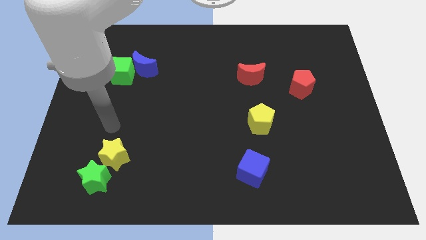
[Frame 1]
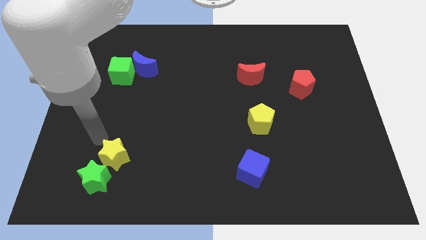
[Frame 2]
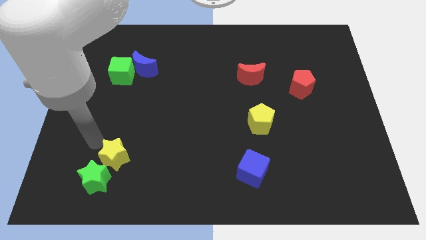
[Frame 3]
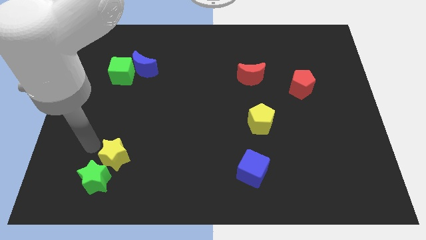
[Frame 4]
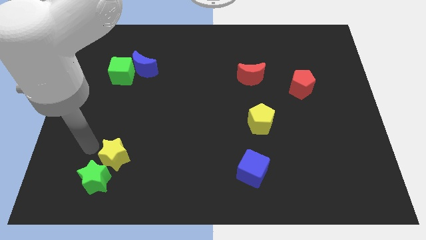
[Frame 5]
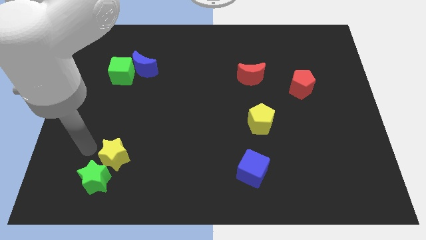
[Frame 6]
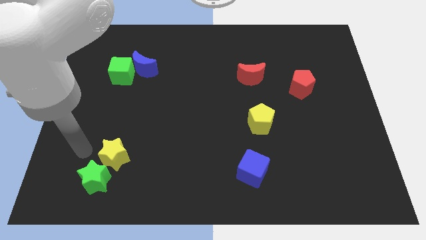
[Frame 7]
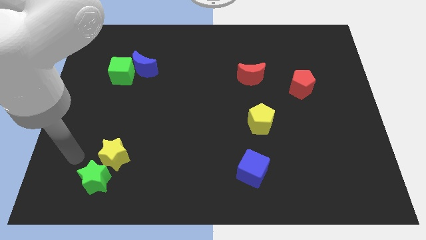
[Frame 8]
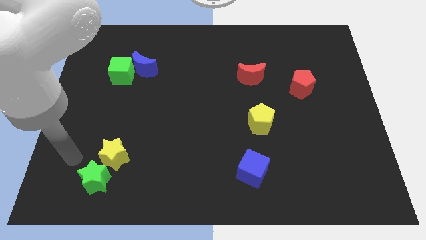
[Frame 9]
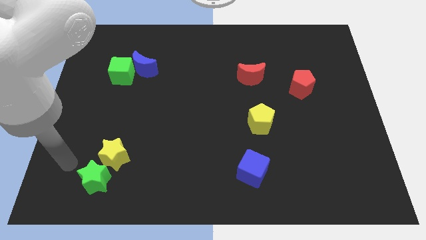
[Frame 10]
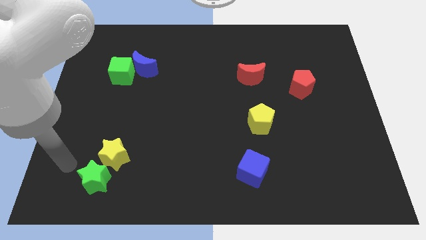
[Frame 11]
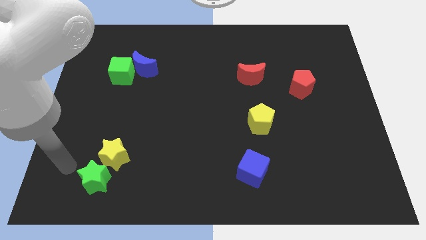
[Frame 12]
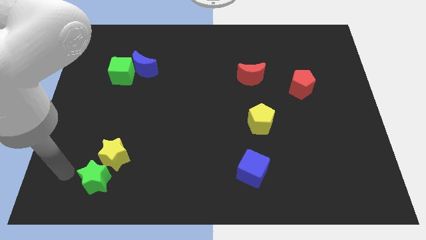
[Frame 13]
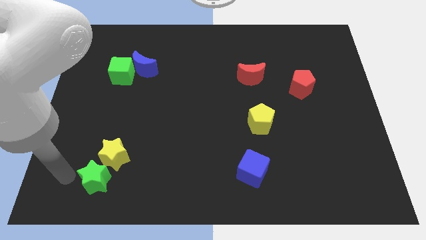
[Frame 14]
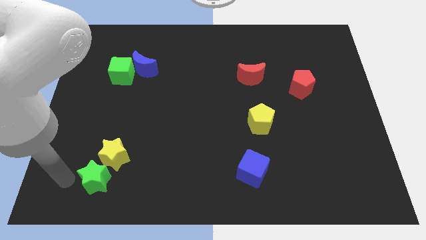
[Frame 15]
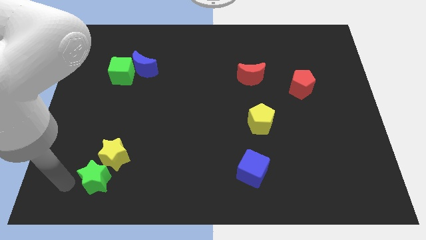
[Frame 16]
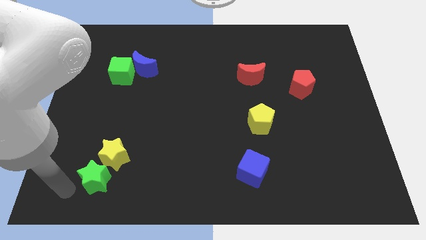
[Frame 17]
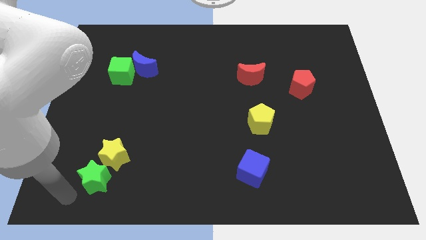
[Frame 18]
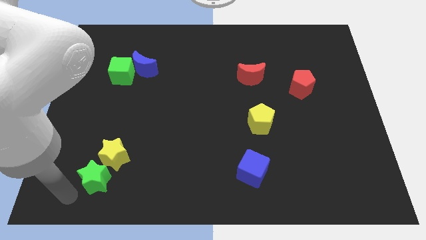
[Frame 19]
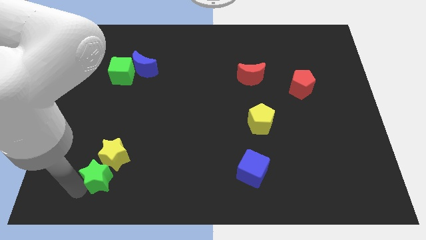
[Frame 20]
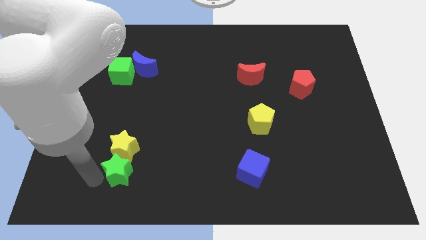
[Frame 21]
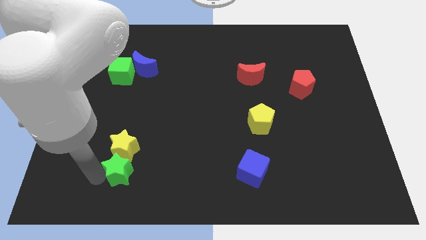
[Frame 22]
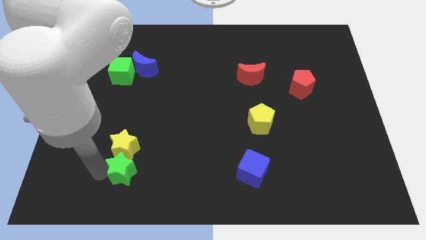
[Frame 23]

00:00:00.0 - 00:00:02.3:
move the green star into the yellow star

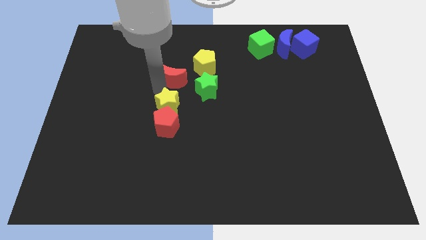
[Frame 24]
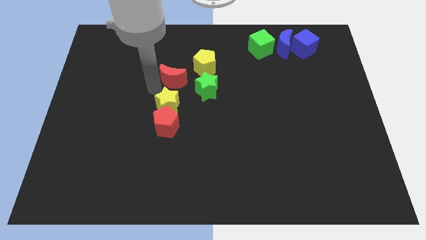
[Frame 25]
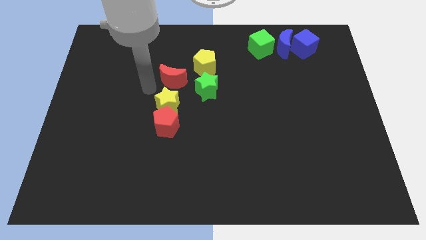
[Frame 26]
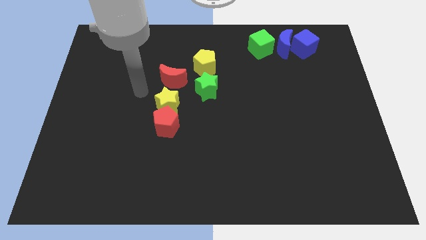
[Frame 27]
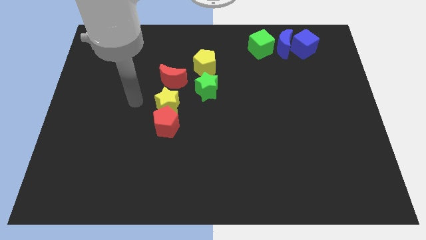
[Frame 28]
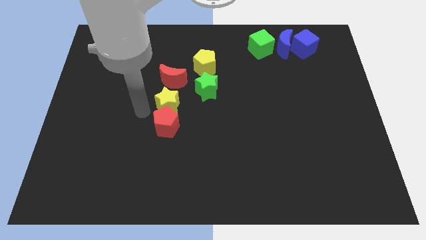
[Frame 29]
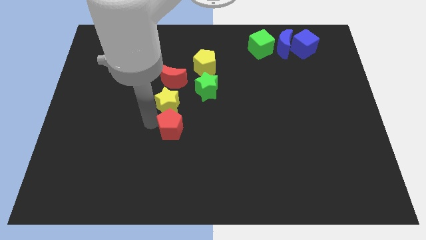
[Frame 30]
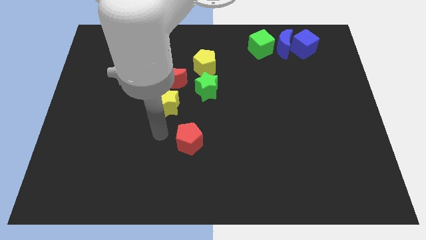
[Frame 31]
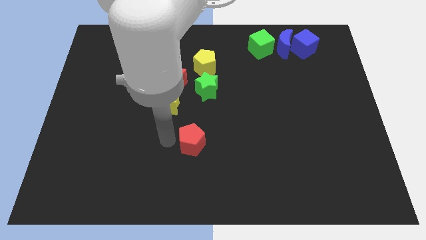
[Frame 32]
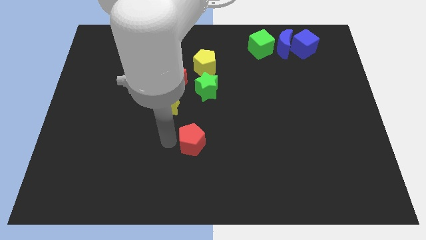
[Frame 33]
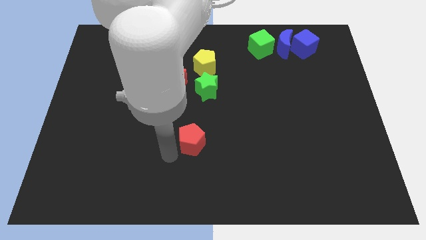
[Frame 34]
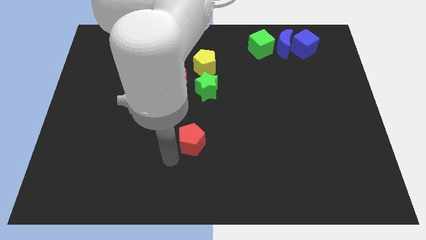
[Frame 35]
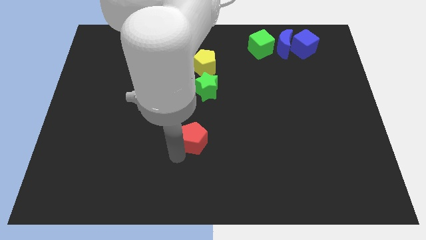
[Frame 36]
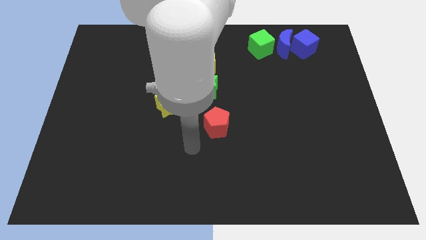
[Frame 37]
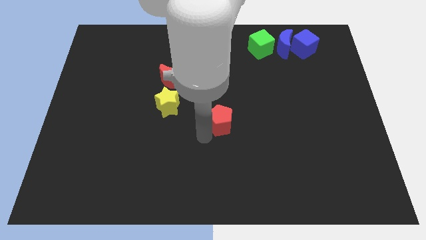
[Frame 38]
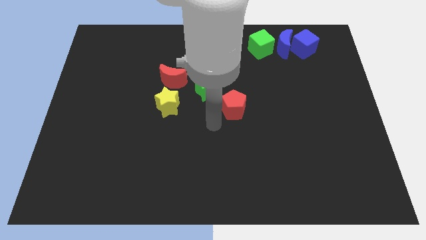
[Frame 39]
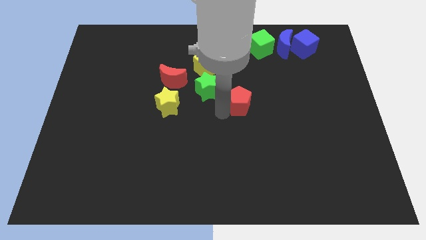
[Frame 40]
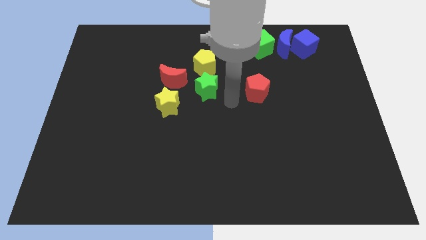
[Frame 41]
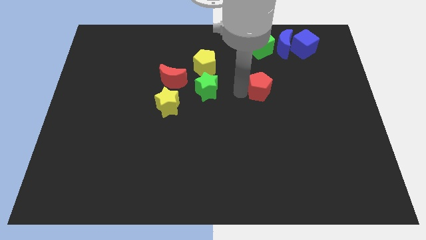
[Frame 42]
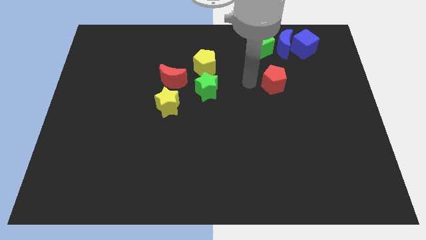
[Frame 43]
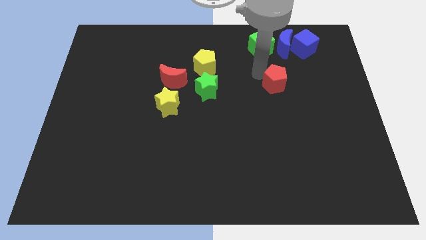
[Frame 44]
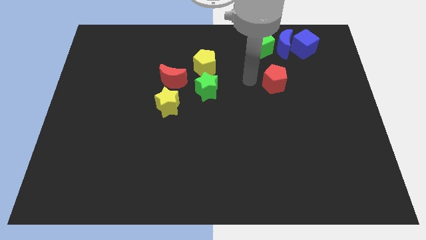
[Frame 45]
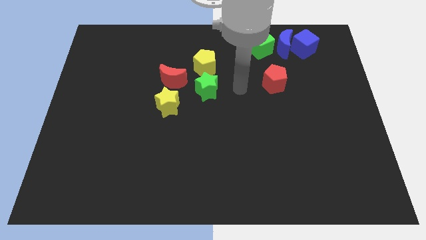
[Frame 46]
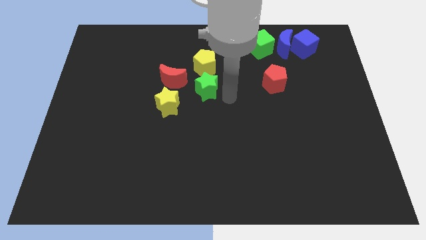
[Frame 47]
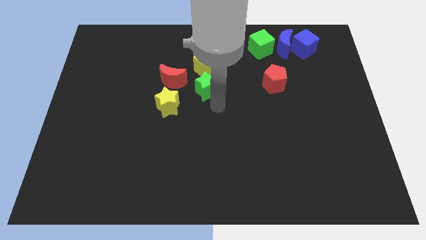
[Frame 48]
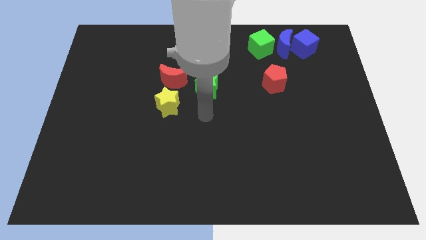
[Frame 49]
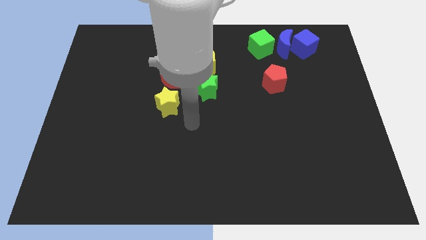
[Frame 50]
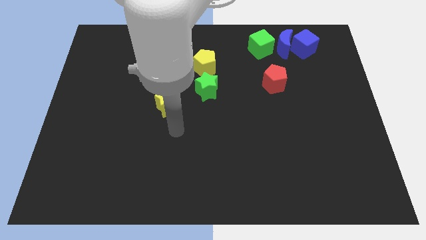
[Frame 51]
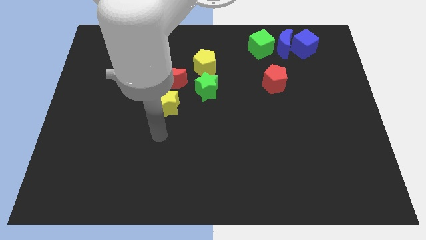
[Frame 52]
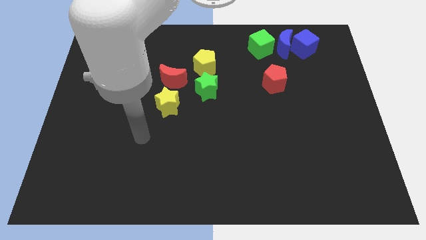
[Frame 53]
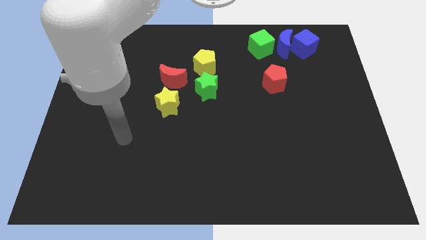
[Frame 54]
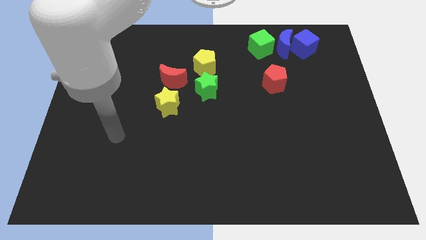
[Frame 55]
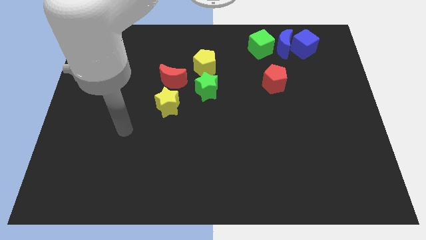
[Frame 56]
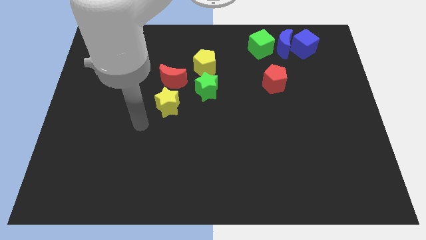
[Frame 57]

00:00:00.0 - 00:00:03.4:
move the red pentagon to the bottom left of the blue cube

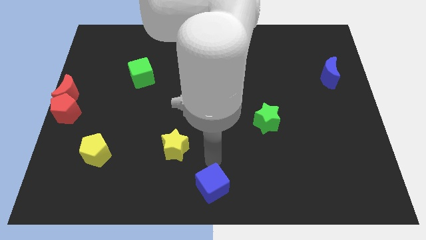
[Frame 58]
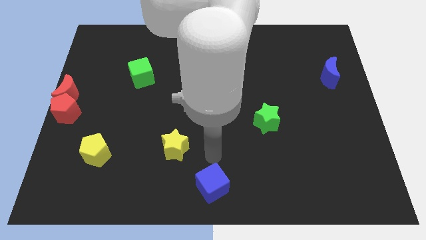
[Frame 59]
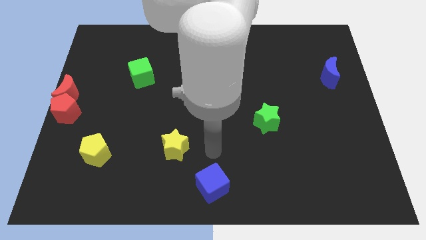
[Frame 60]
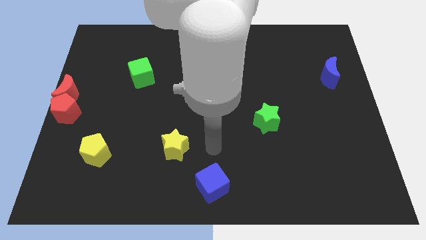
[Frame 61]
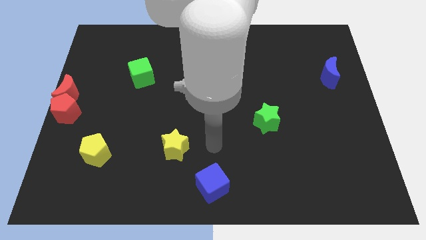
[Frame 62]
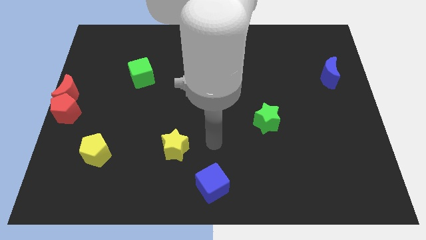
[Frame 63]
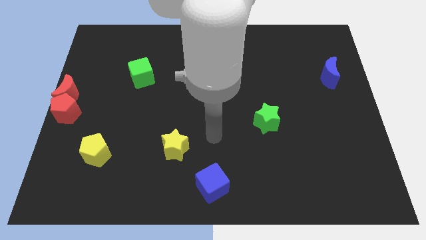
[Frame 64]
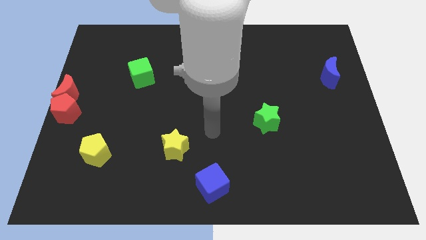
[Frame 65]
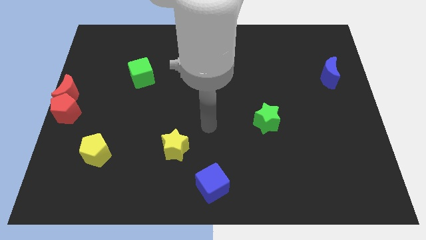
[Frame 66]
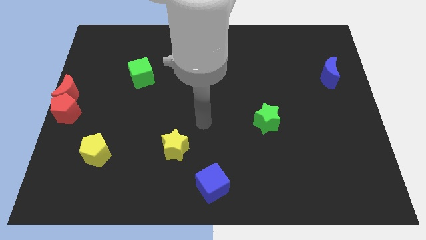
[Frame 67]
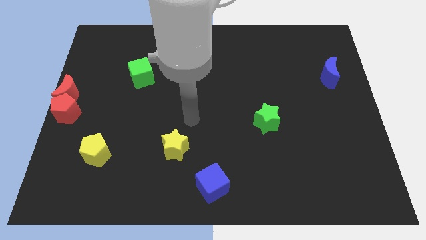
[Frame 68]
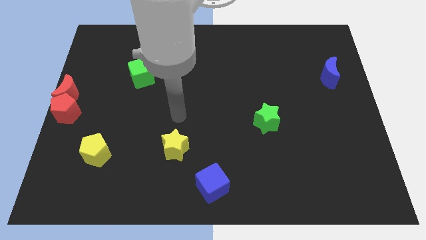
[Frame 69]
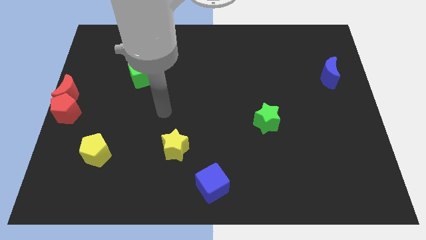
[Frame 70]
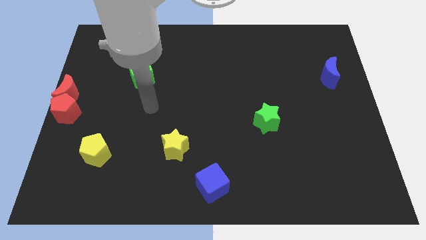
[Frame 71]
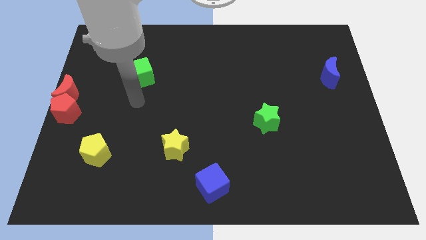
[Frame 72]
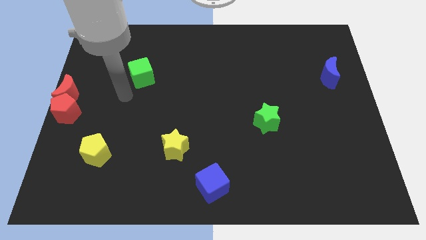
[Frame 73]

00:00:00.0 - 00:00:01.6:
move the arm away from the blue cube

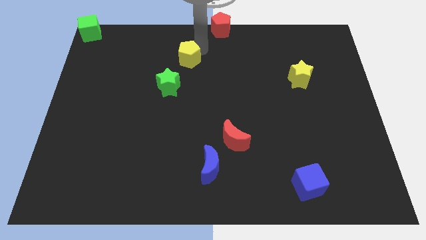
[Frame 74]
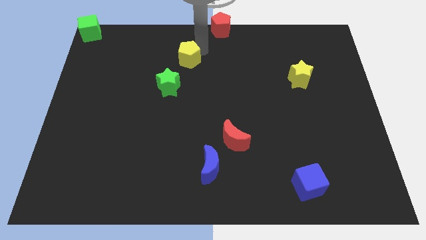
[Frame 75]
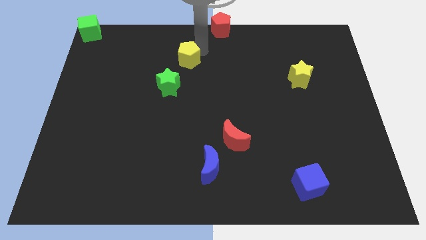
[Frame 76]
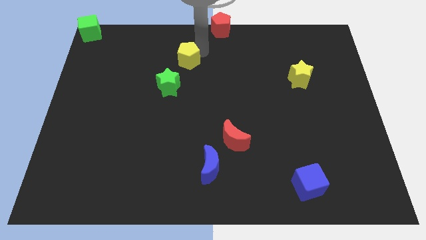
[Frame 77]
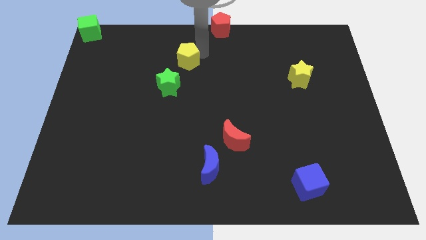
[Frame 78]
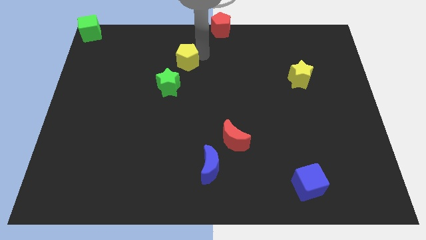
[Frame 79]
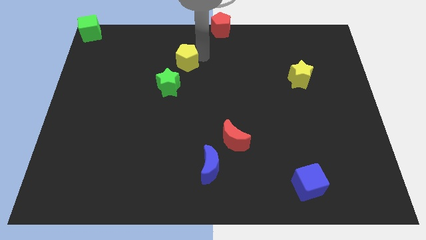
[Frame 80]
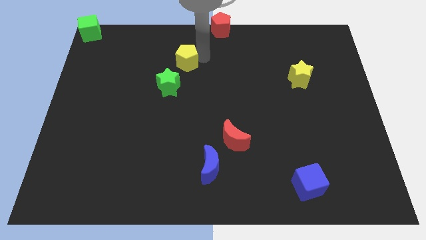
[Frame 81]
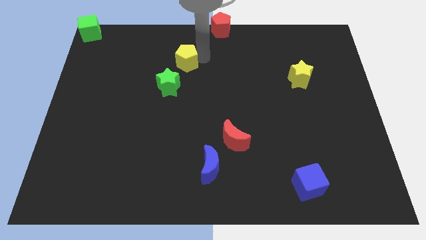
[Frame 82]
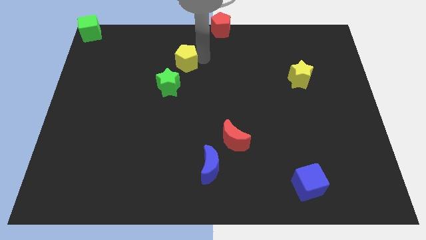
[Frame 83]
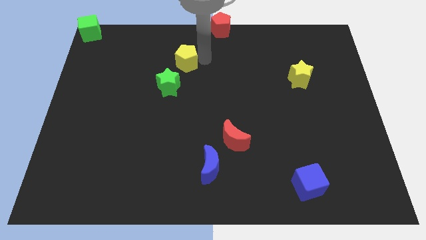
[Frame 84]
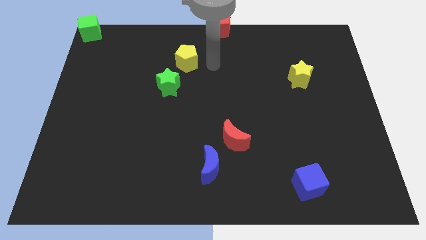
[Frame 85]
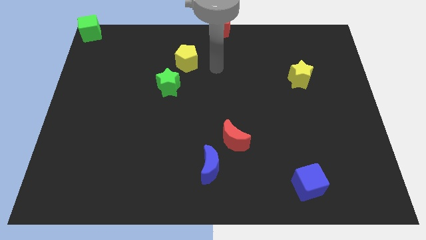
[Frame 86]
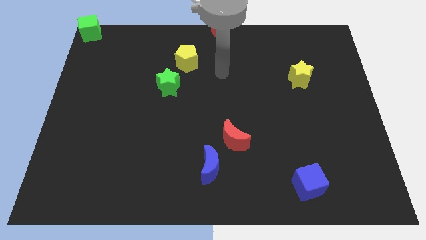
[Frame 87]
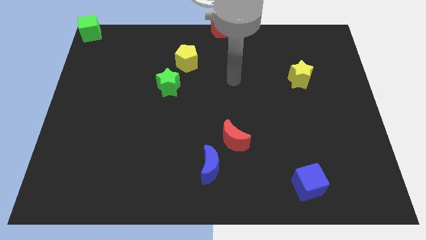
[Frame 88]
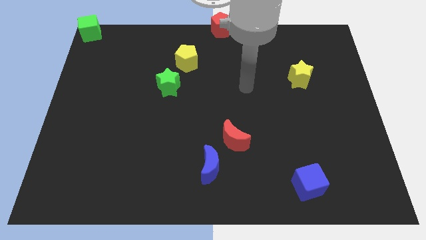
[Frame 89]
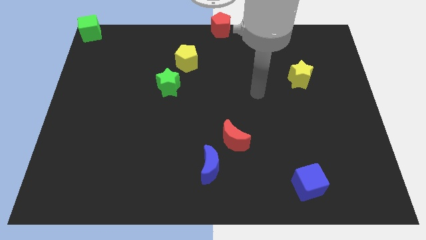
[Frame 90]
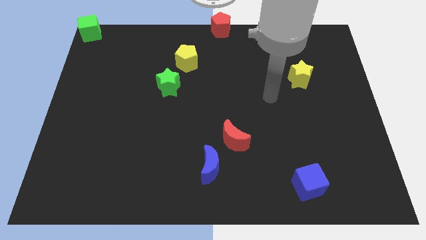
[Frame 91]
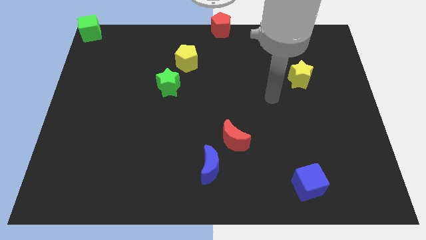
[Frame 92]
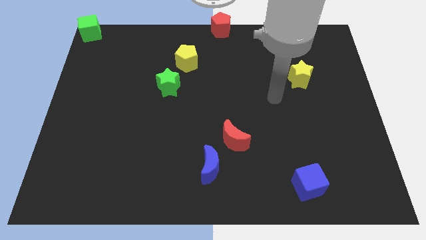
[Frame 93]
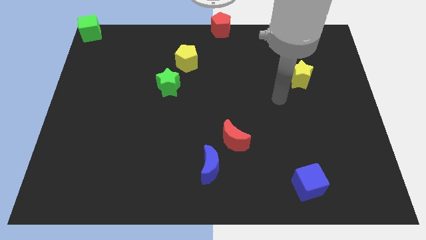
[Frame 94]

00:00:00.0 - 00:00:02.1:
move your arm close to the yellow star
